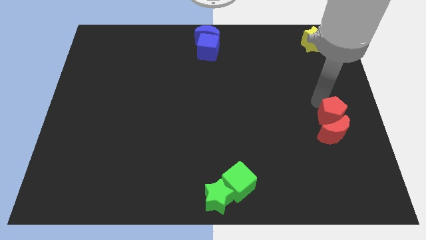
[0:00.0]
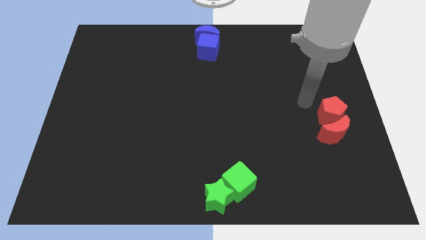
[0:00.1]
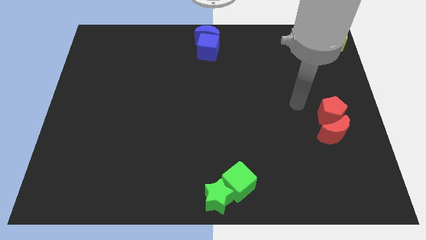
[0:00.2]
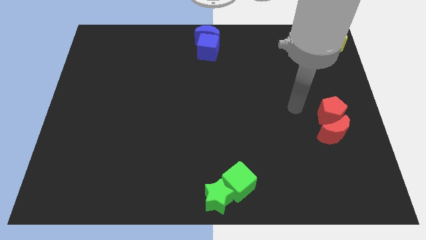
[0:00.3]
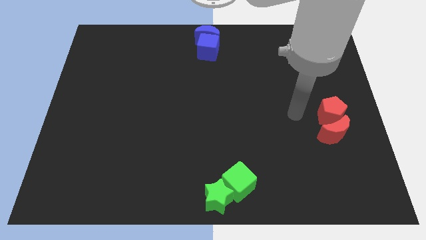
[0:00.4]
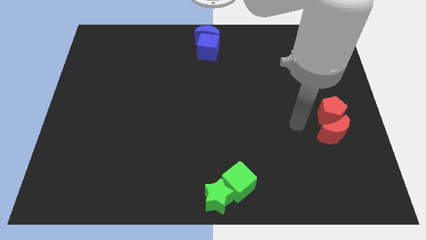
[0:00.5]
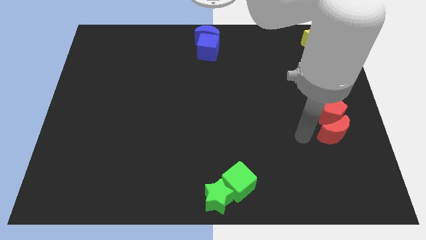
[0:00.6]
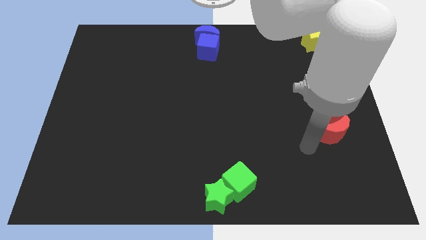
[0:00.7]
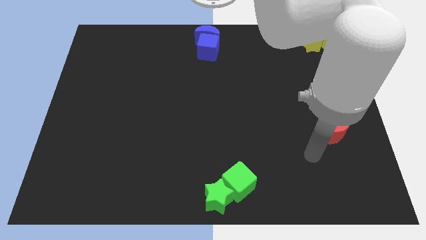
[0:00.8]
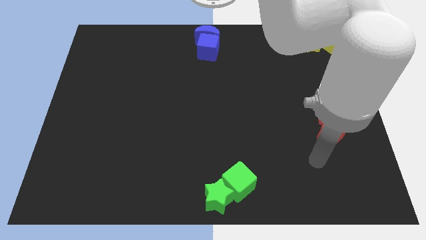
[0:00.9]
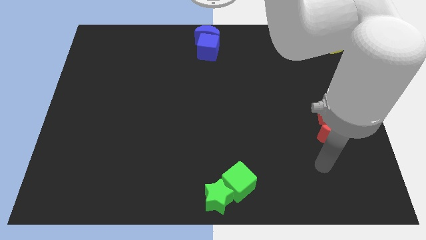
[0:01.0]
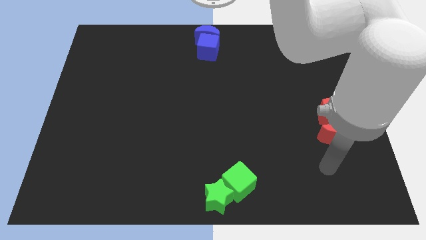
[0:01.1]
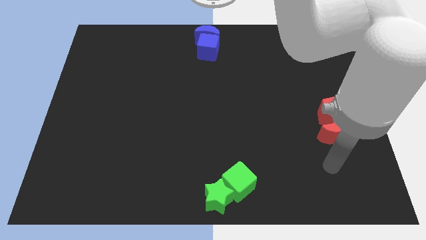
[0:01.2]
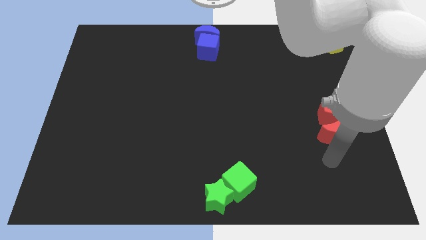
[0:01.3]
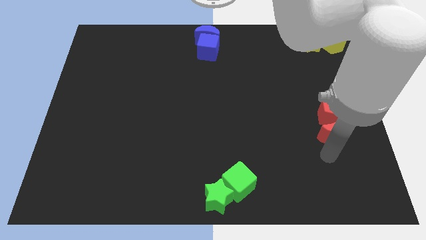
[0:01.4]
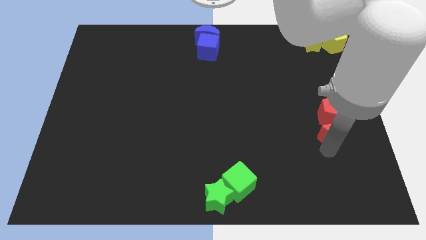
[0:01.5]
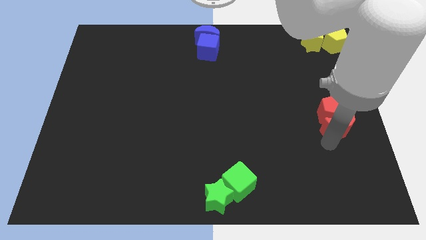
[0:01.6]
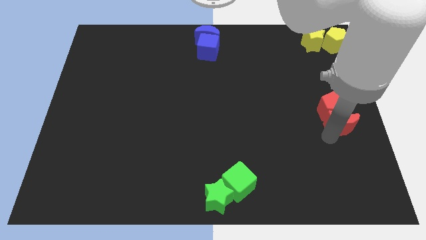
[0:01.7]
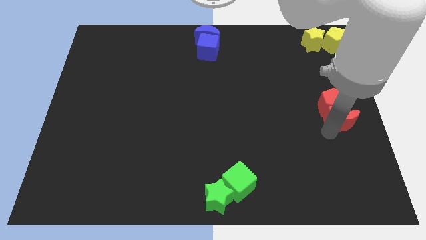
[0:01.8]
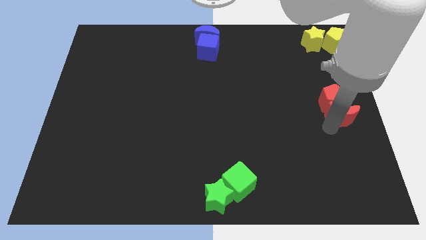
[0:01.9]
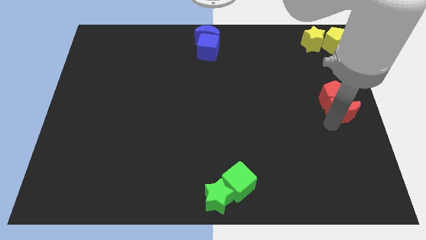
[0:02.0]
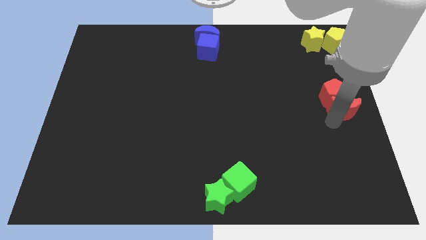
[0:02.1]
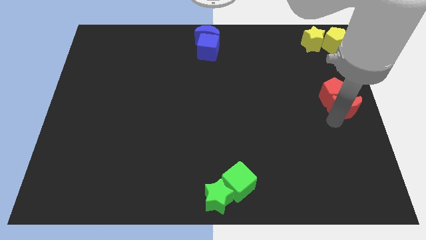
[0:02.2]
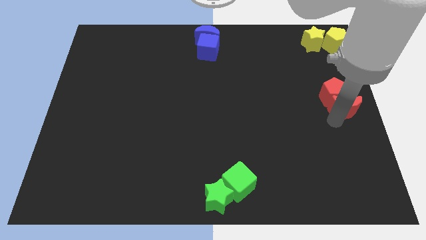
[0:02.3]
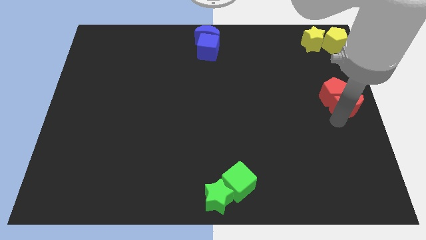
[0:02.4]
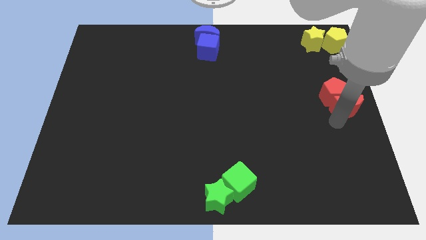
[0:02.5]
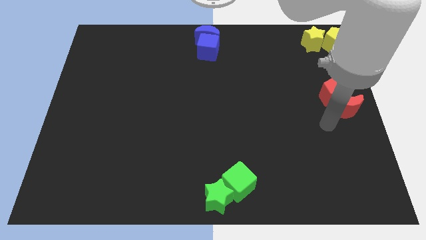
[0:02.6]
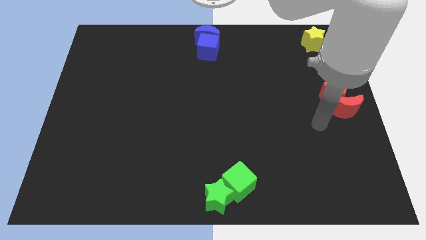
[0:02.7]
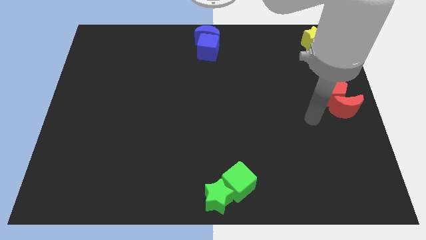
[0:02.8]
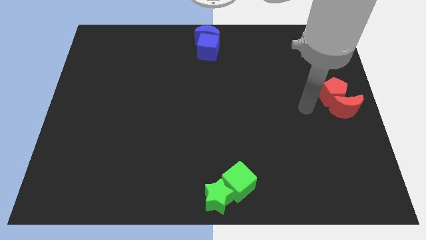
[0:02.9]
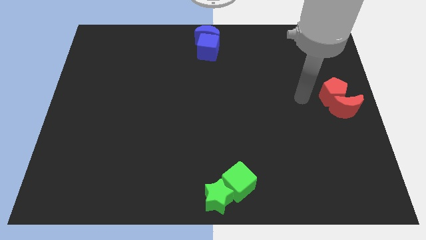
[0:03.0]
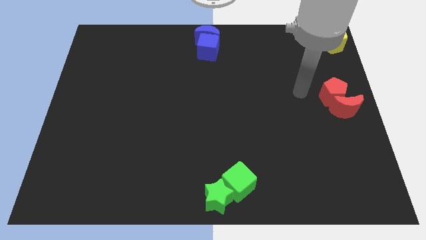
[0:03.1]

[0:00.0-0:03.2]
push red moon along with red pentagon upwards

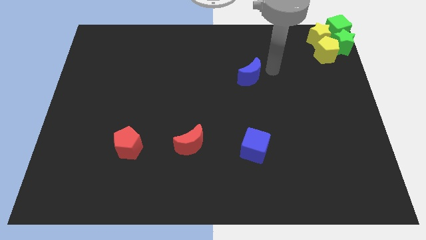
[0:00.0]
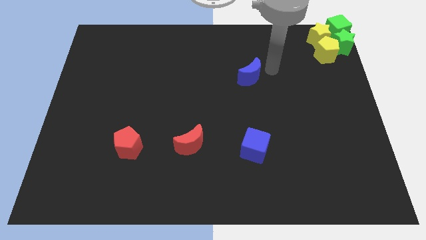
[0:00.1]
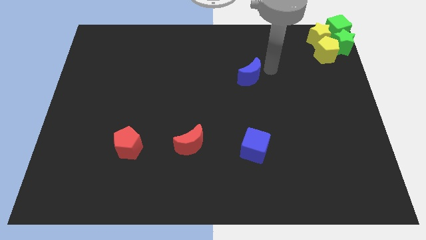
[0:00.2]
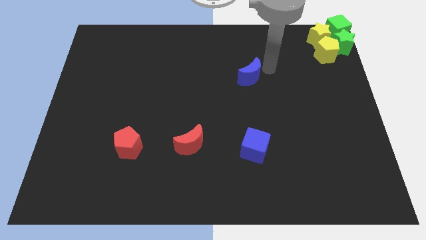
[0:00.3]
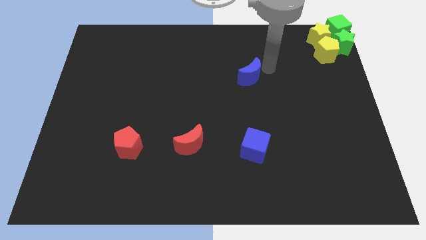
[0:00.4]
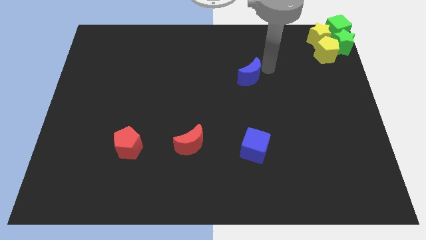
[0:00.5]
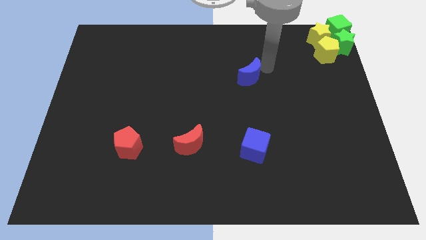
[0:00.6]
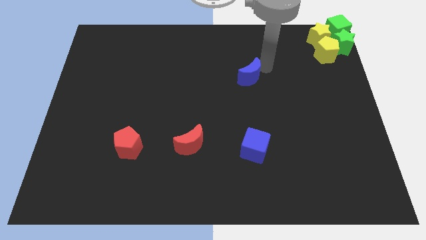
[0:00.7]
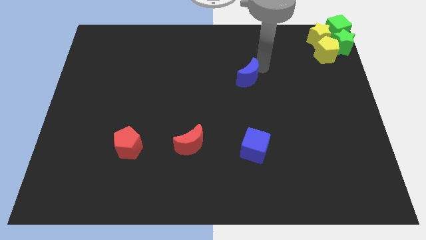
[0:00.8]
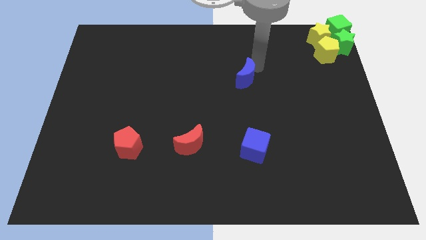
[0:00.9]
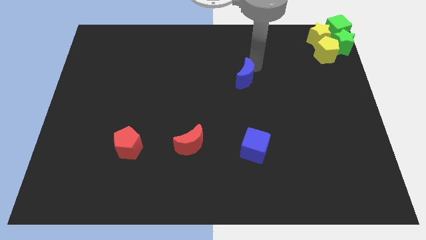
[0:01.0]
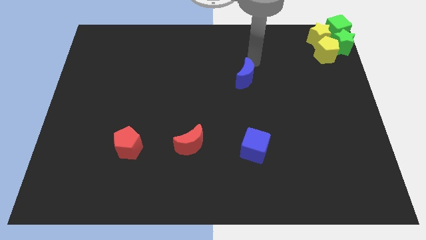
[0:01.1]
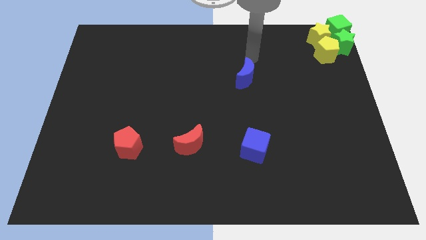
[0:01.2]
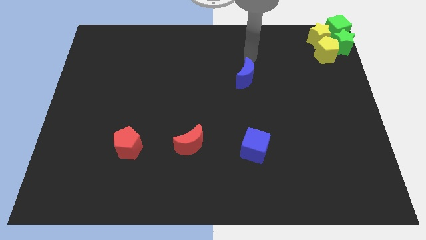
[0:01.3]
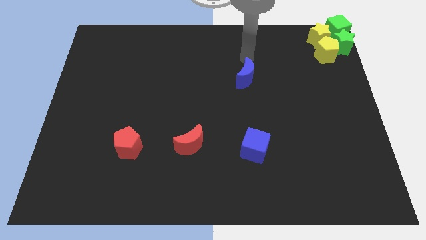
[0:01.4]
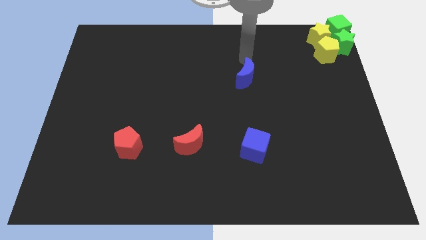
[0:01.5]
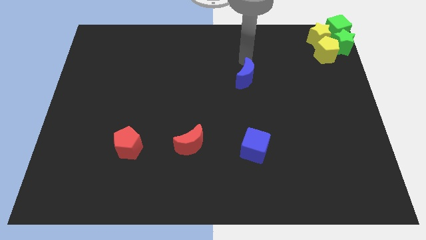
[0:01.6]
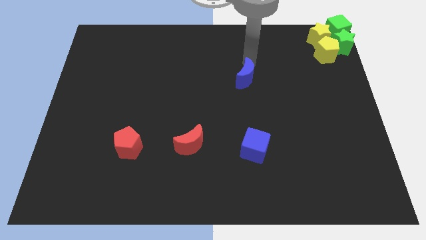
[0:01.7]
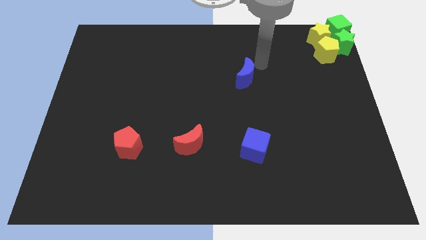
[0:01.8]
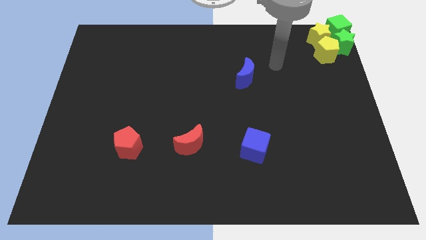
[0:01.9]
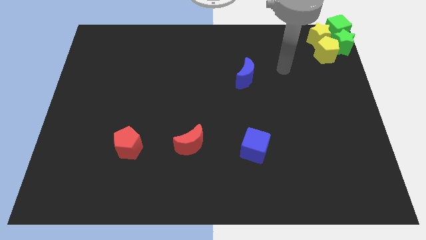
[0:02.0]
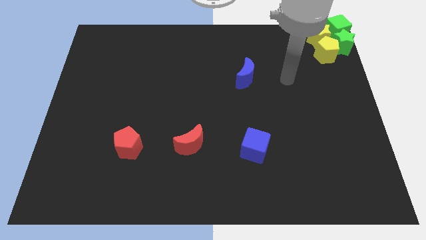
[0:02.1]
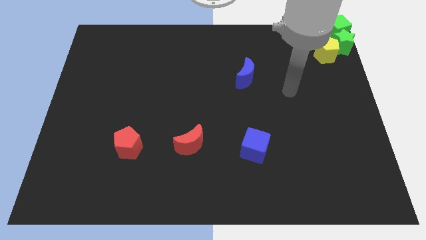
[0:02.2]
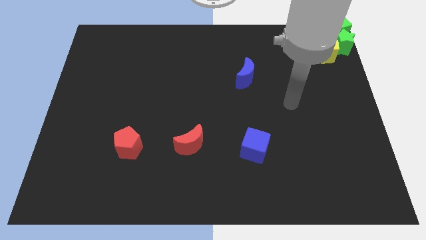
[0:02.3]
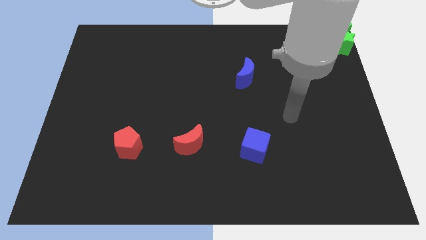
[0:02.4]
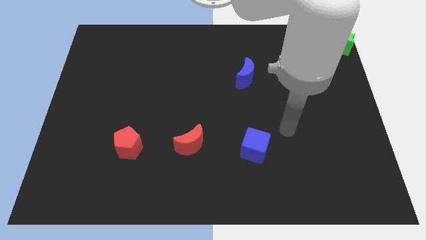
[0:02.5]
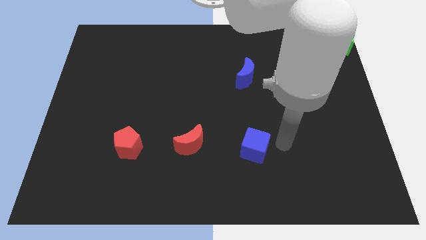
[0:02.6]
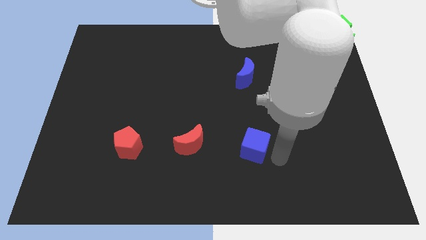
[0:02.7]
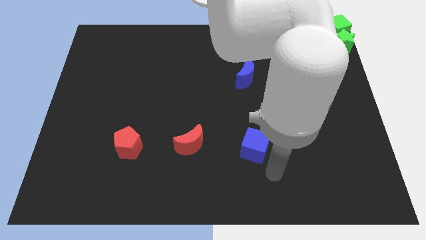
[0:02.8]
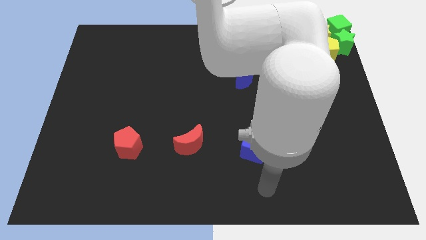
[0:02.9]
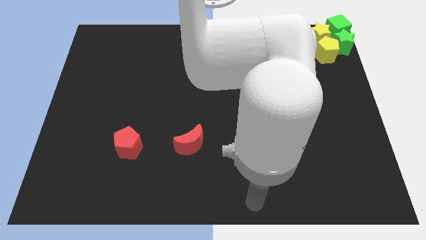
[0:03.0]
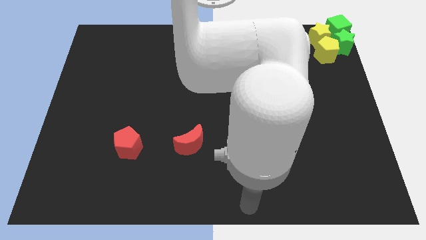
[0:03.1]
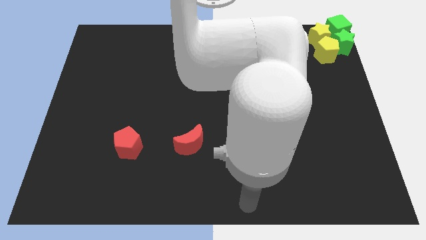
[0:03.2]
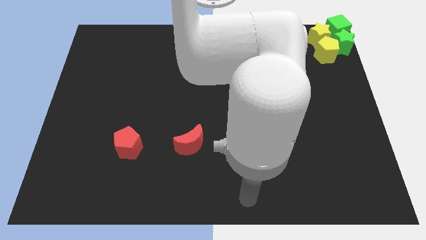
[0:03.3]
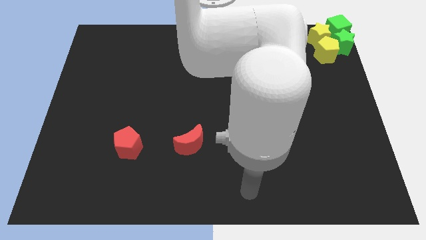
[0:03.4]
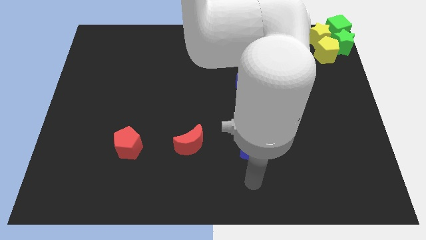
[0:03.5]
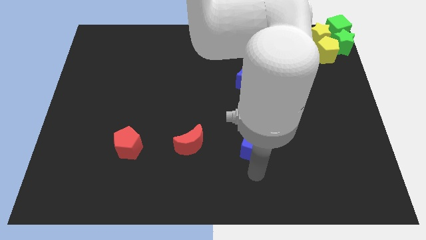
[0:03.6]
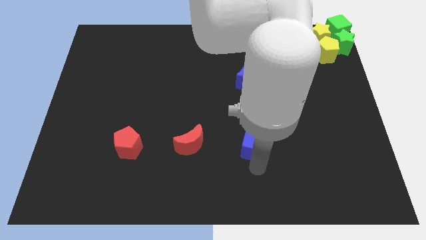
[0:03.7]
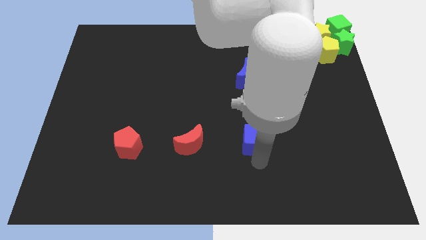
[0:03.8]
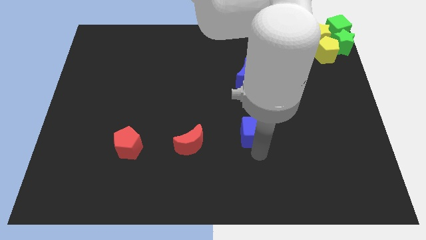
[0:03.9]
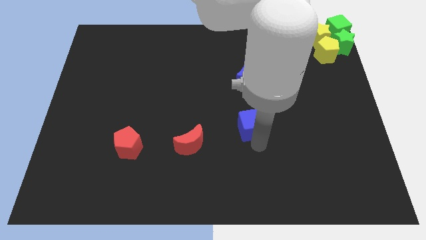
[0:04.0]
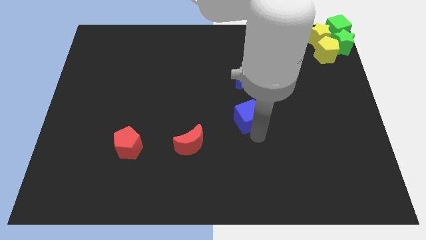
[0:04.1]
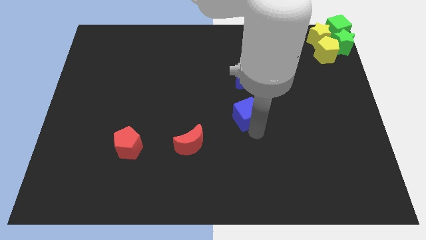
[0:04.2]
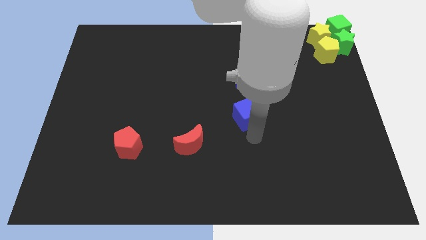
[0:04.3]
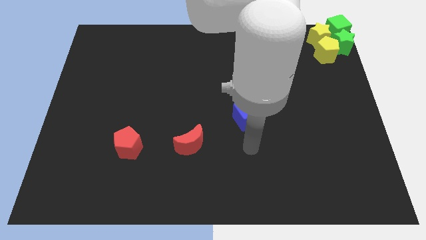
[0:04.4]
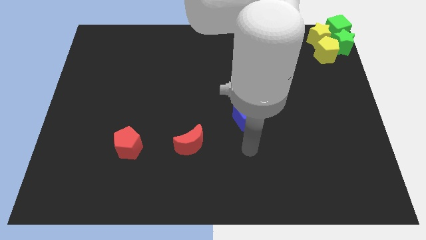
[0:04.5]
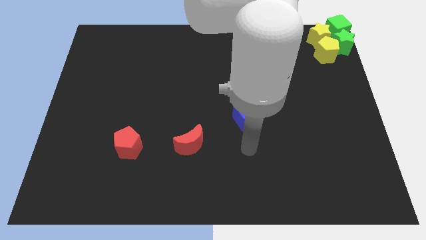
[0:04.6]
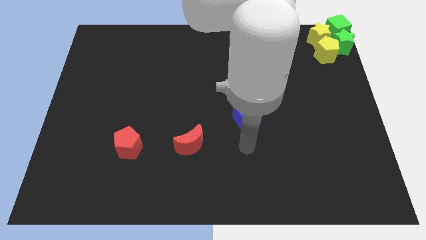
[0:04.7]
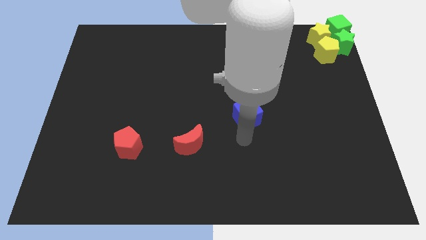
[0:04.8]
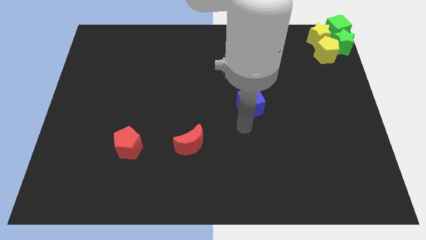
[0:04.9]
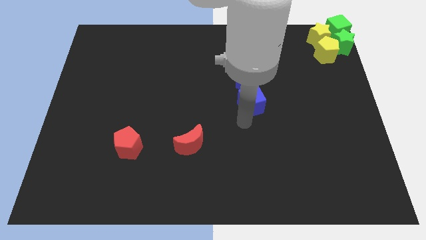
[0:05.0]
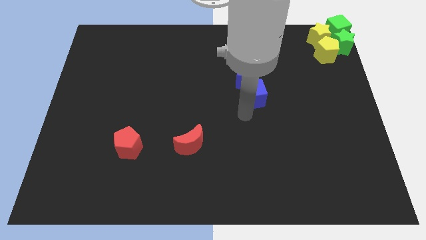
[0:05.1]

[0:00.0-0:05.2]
push the blue cube vertically at the bottom of the blue moon

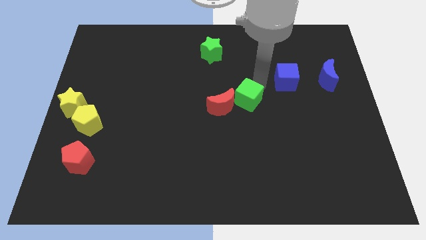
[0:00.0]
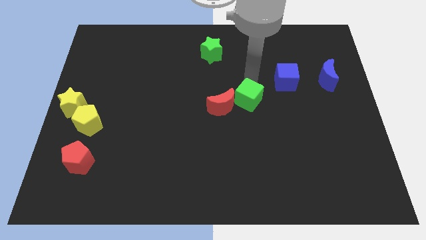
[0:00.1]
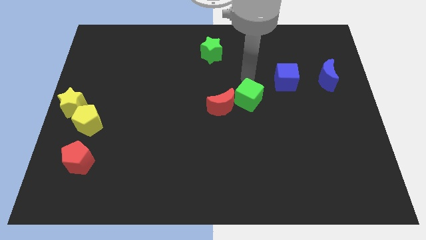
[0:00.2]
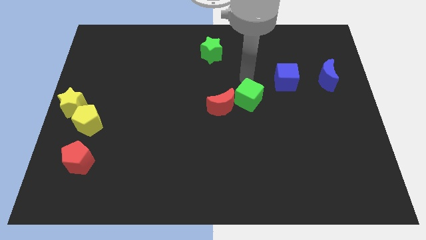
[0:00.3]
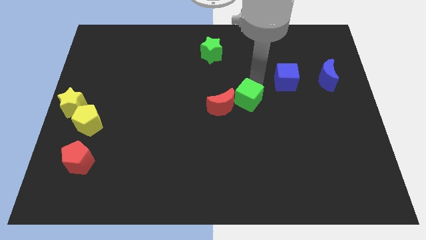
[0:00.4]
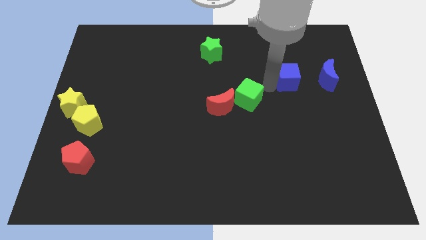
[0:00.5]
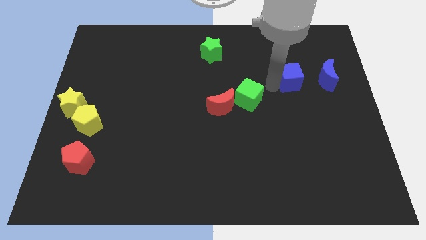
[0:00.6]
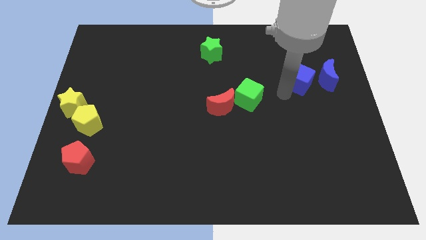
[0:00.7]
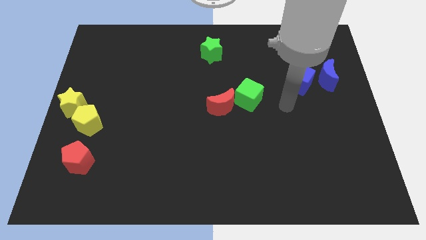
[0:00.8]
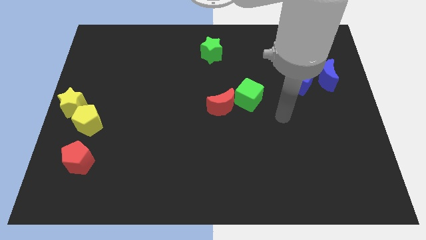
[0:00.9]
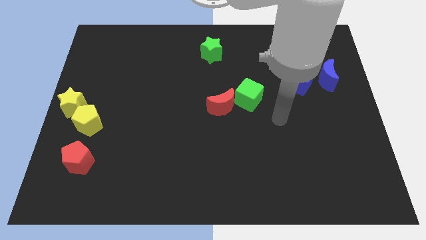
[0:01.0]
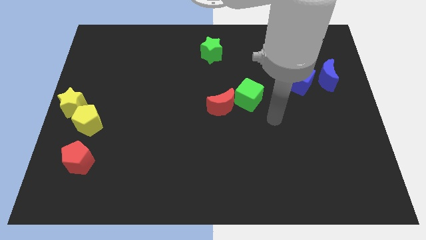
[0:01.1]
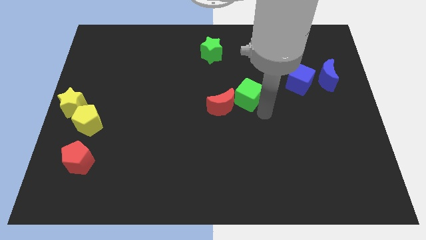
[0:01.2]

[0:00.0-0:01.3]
move the blue cube towards the left of the blue crescent
